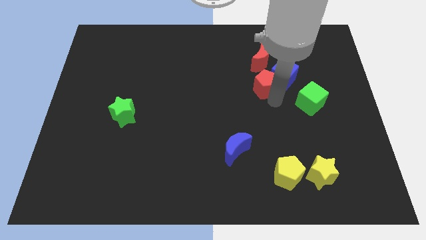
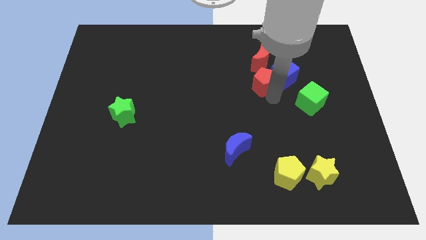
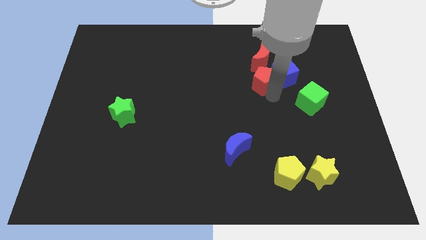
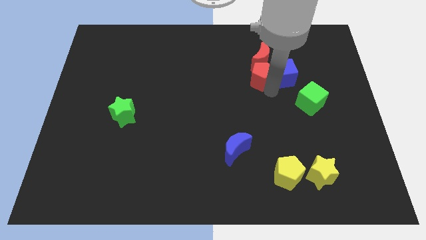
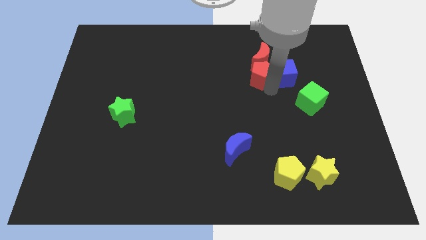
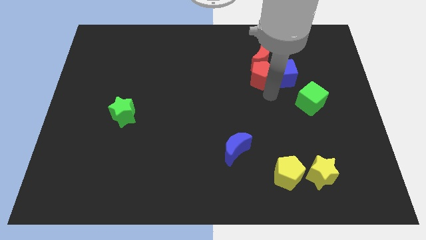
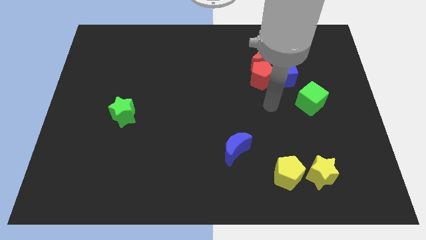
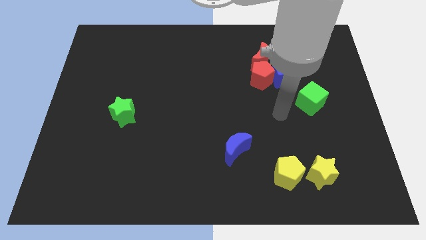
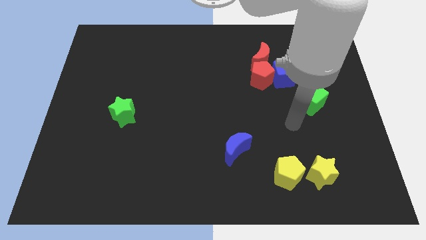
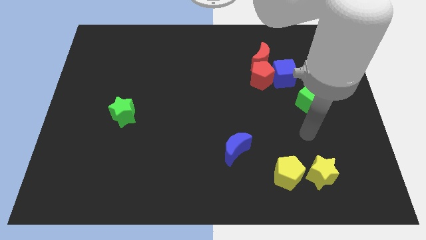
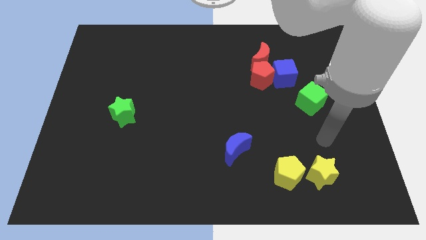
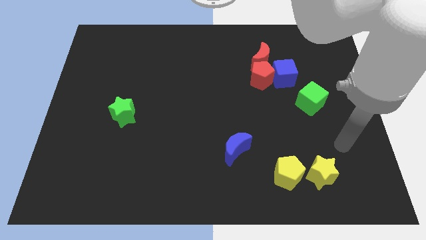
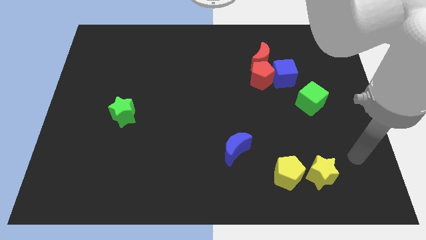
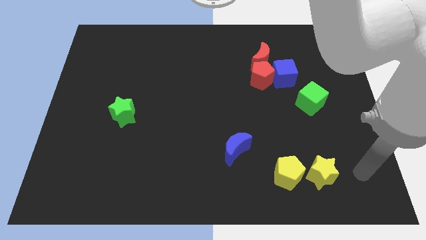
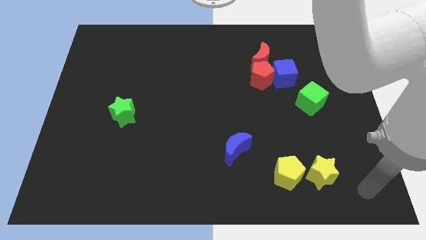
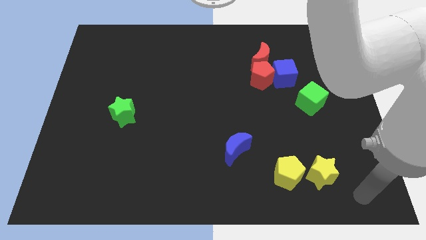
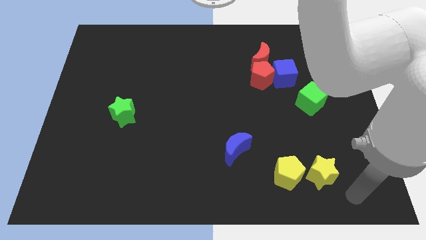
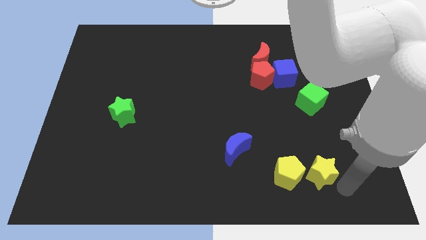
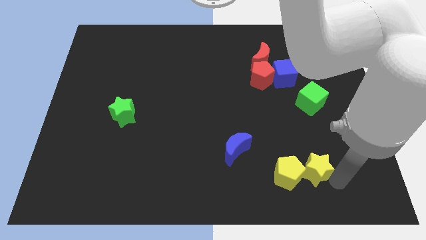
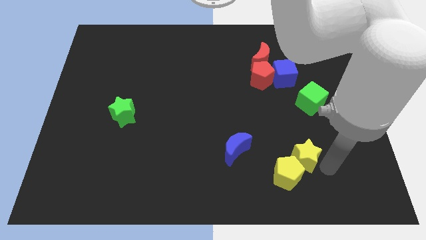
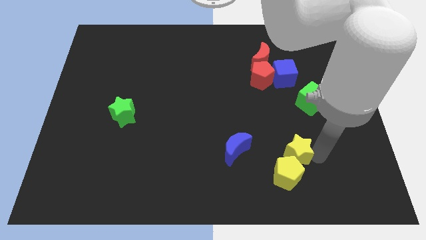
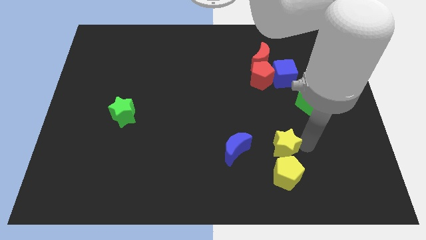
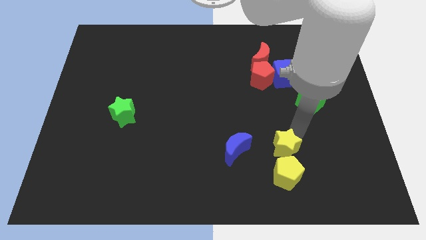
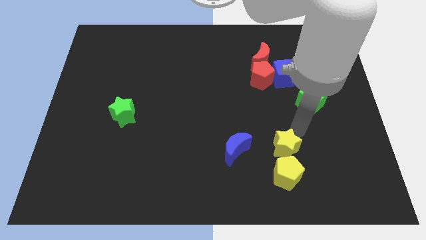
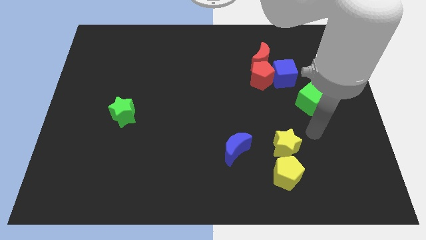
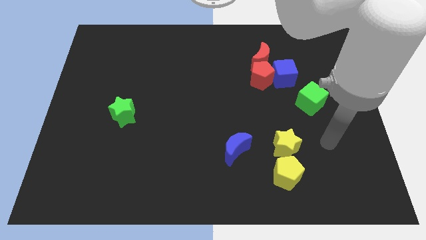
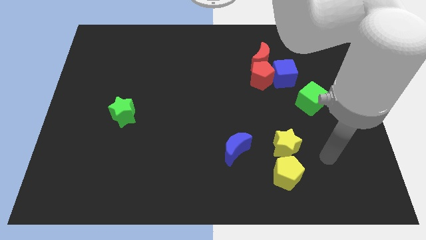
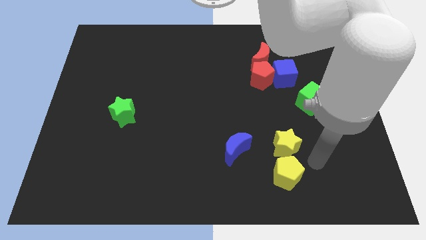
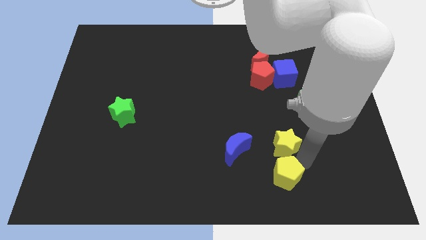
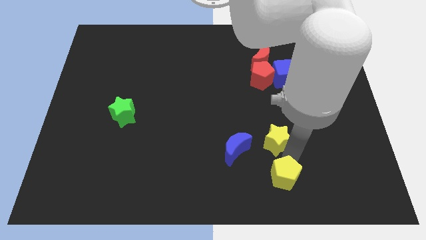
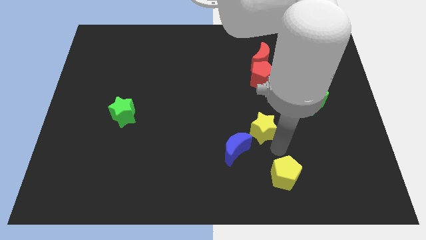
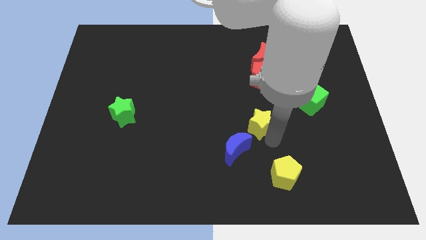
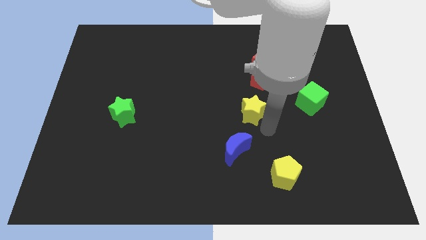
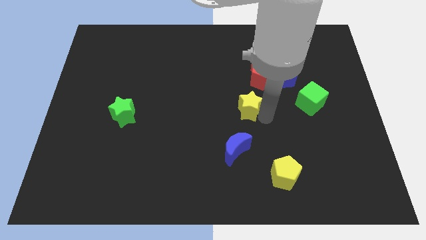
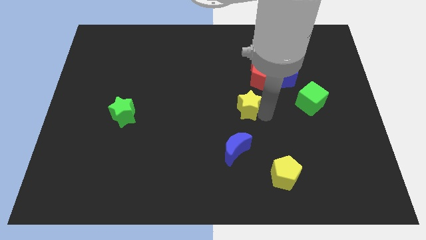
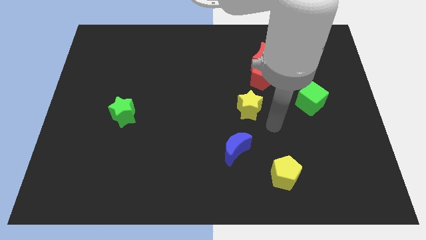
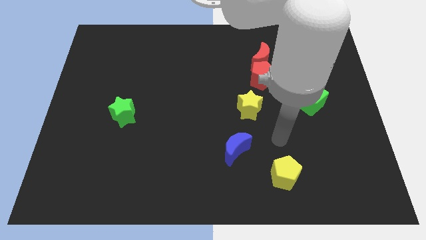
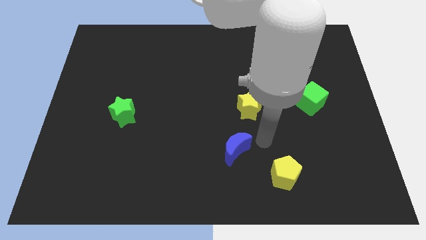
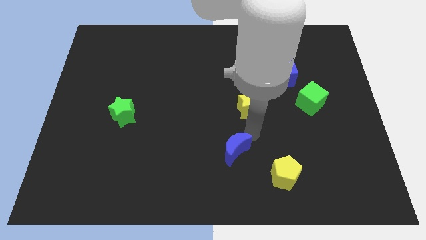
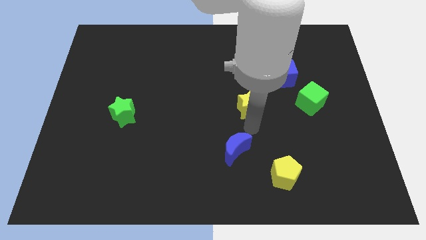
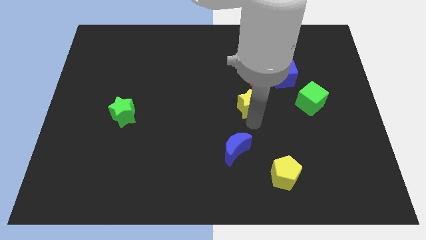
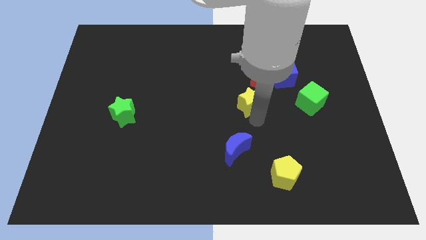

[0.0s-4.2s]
put the yellow star on the top of the blue moon

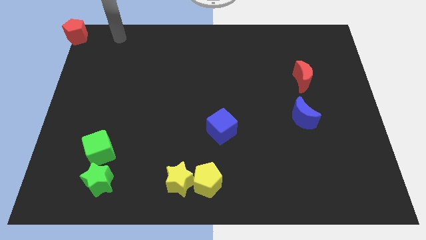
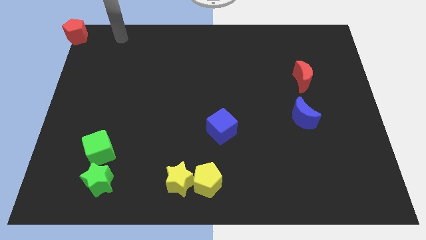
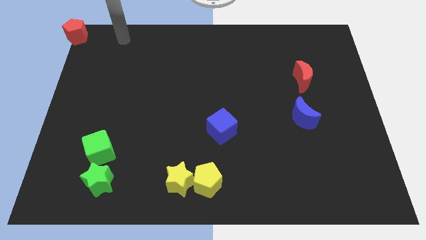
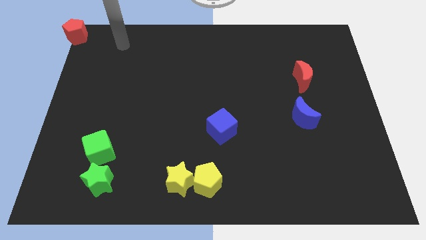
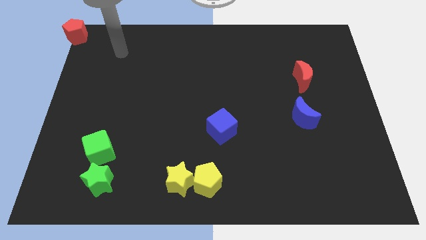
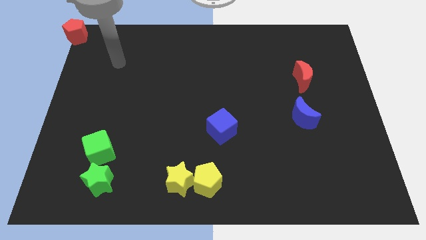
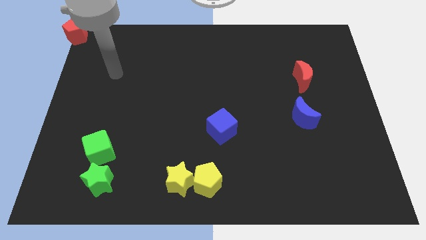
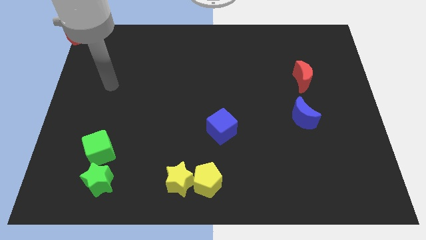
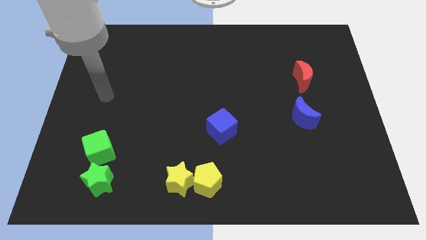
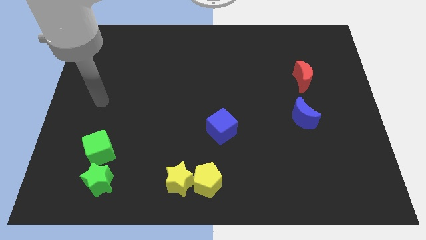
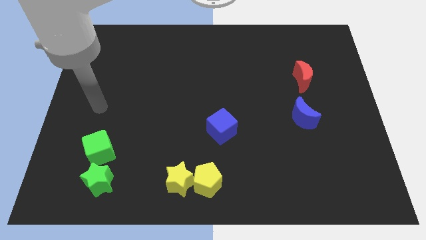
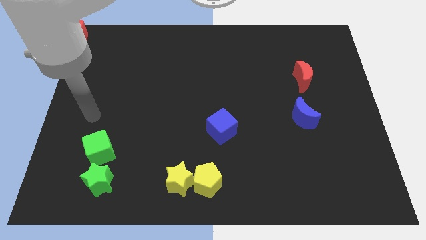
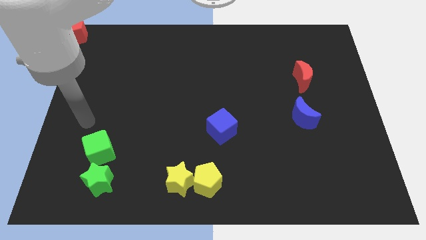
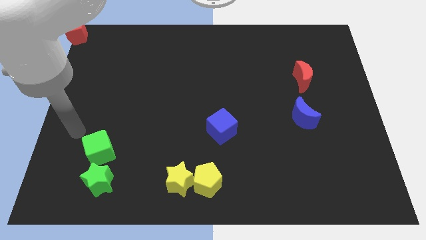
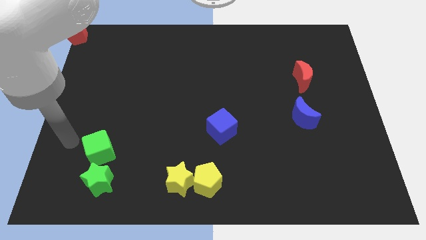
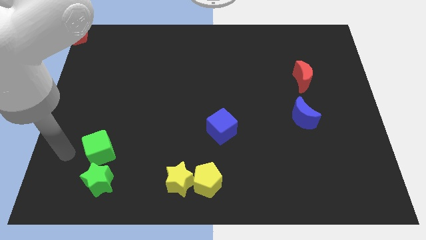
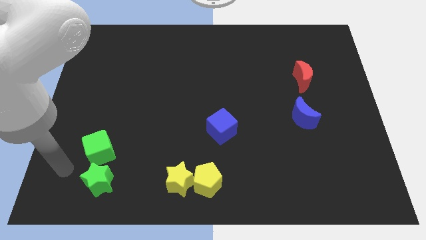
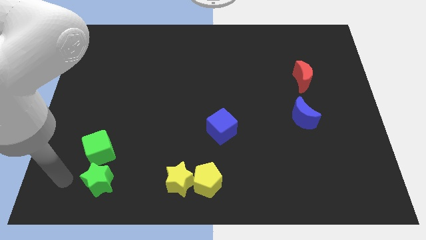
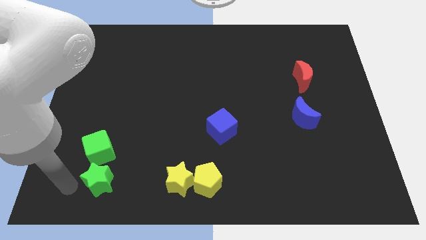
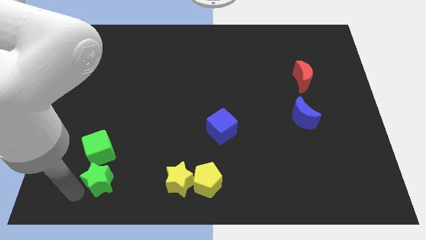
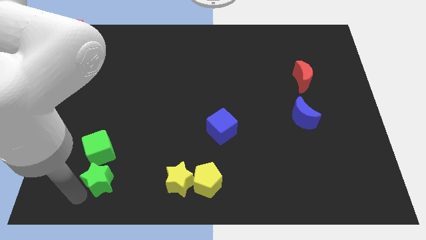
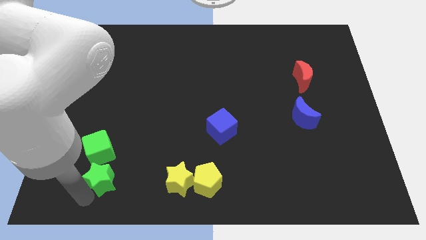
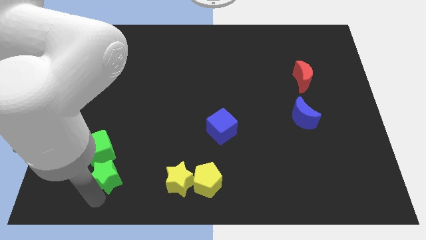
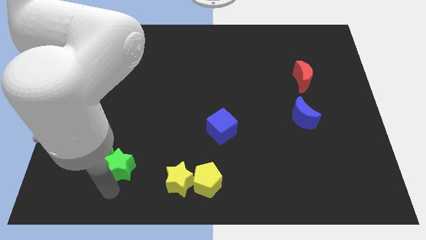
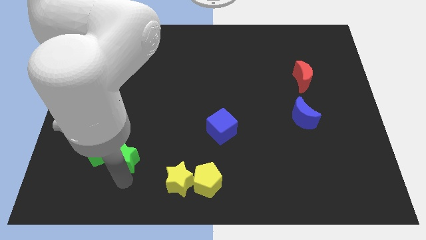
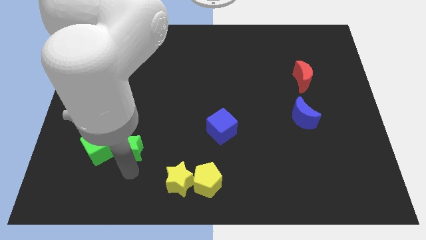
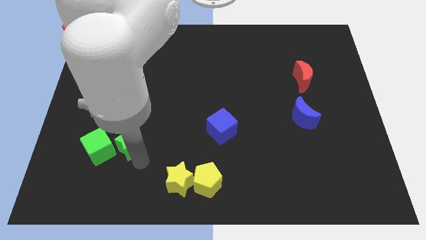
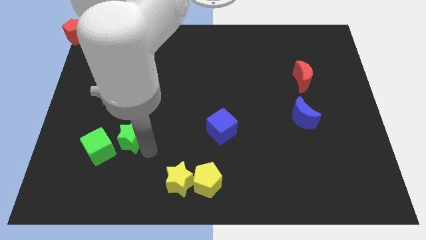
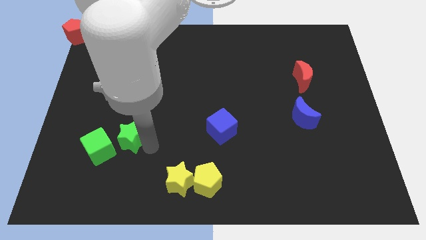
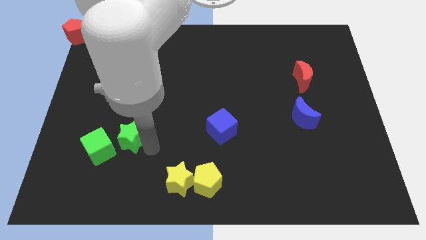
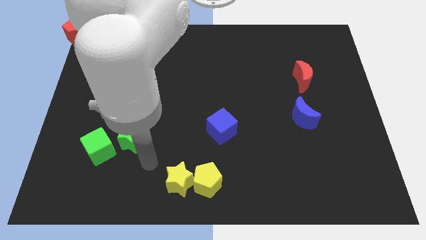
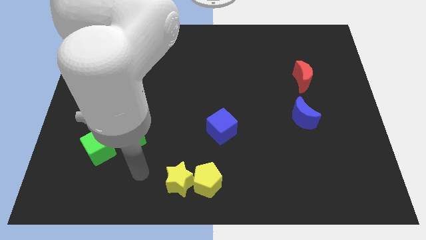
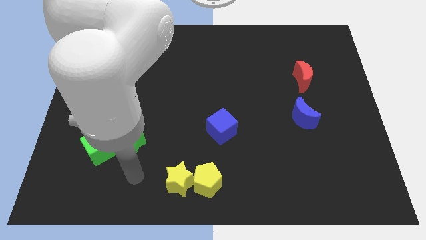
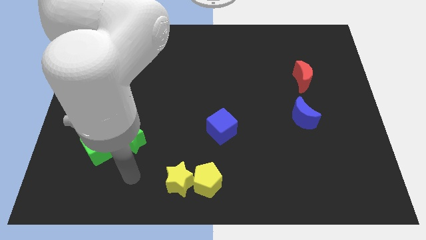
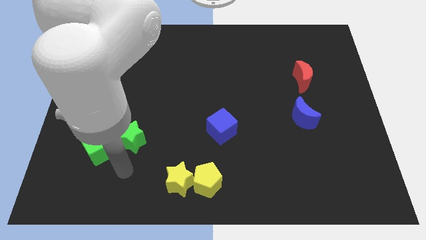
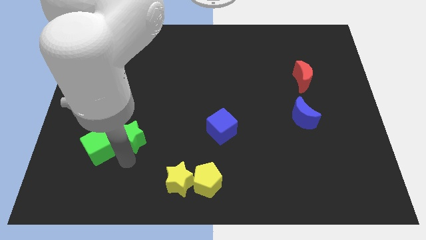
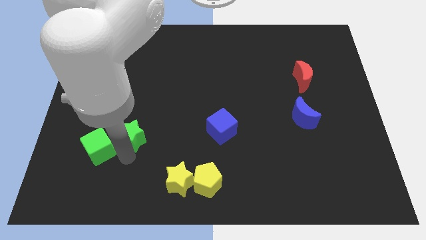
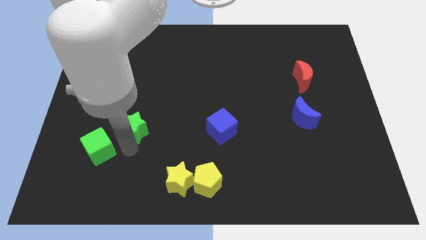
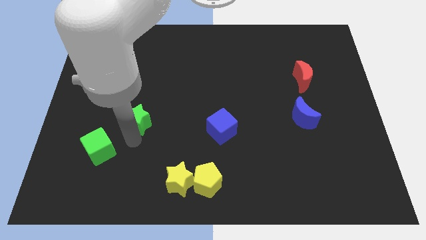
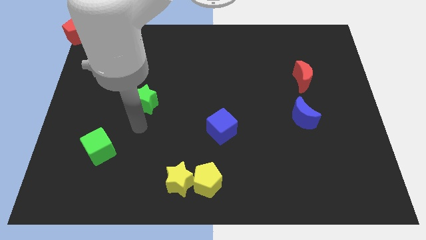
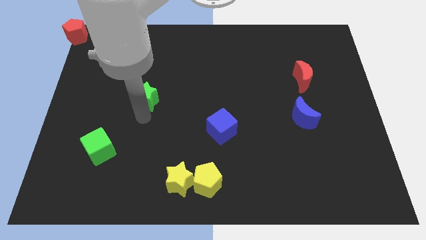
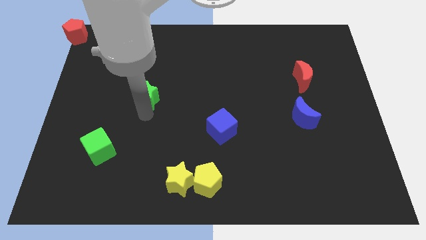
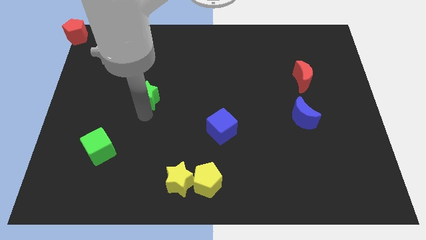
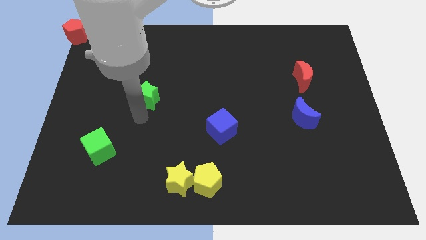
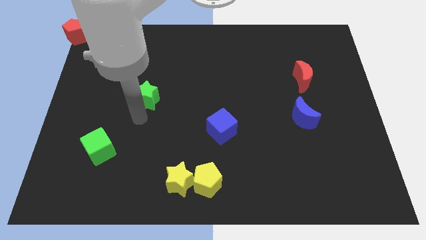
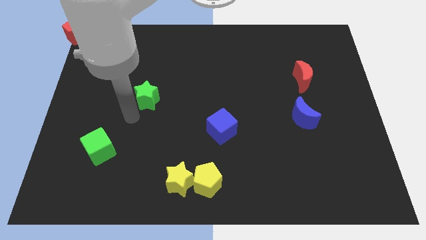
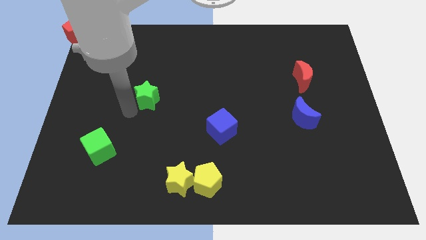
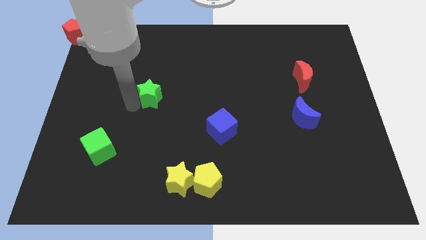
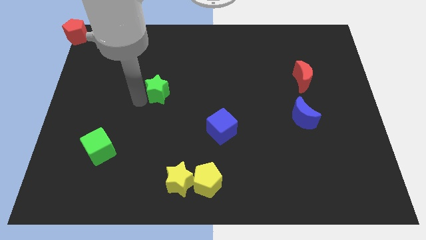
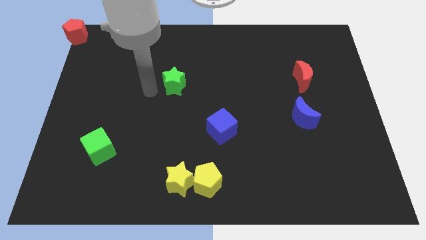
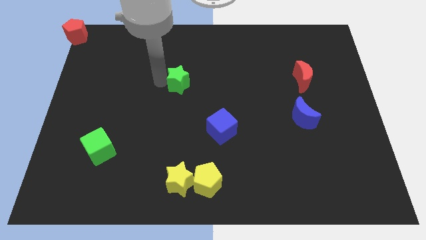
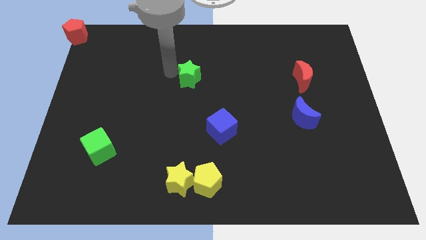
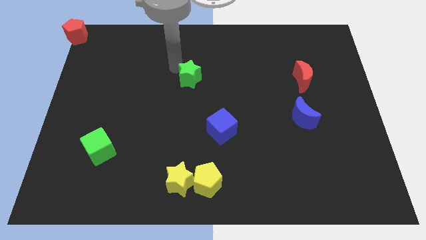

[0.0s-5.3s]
place the green star left to the red moon
